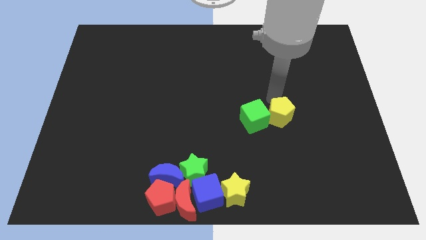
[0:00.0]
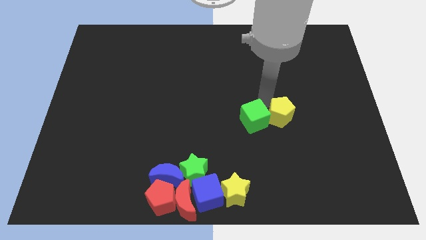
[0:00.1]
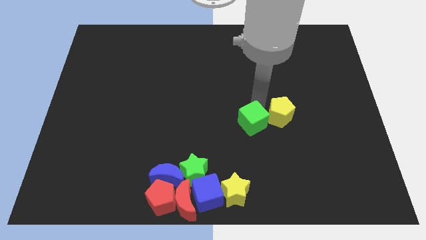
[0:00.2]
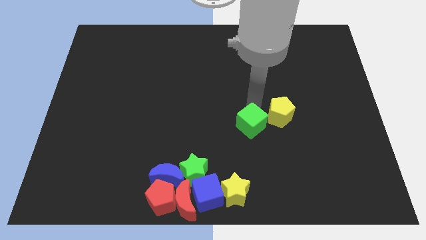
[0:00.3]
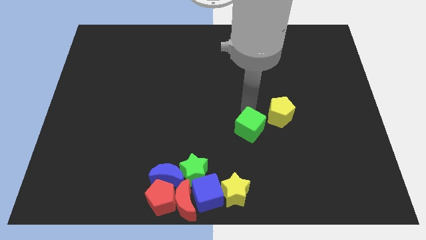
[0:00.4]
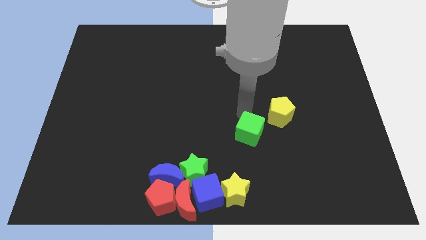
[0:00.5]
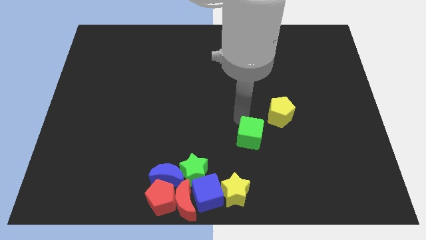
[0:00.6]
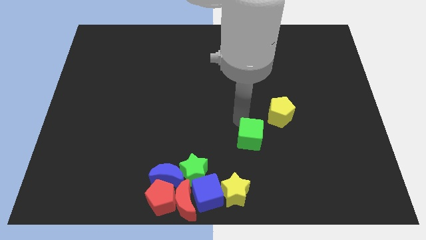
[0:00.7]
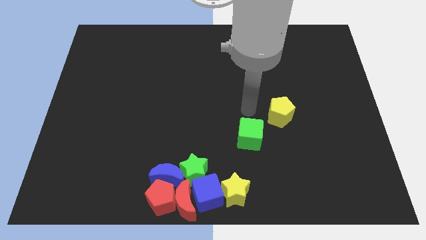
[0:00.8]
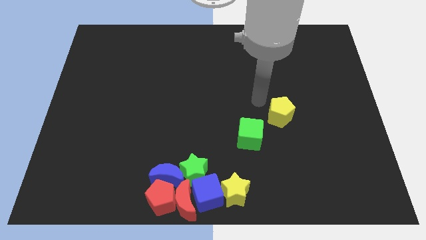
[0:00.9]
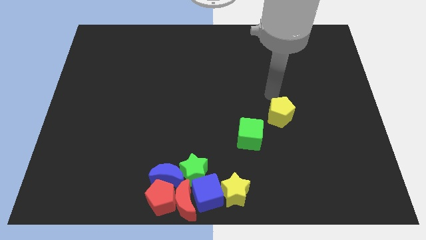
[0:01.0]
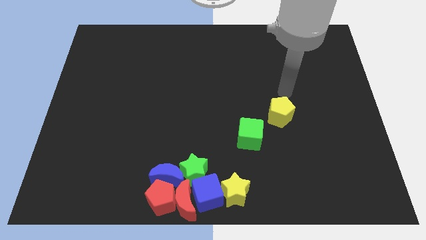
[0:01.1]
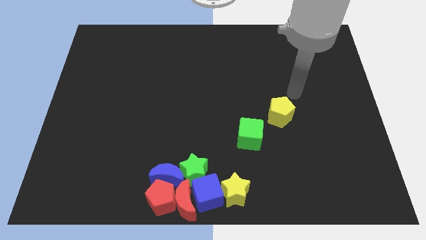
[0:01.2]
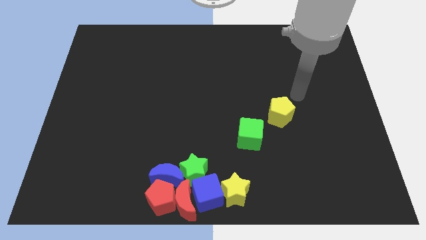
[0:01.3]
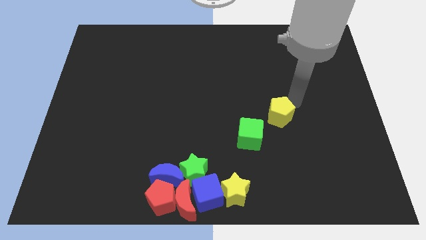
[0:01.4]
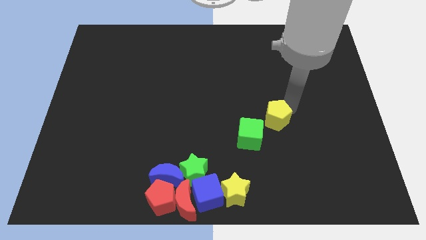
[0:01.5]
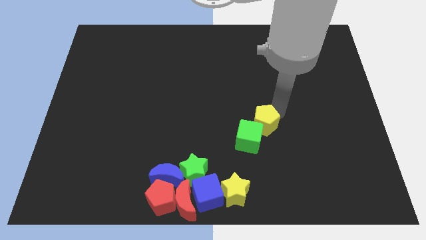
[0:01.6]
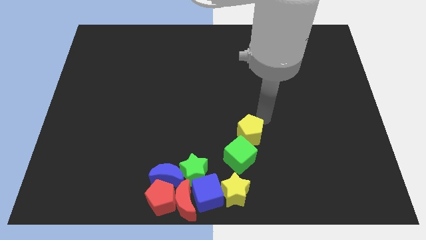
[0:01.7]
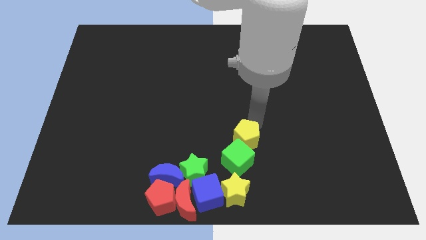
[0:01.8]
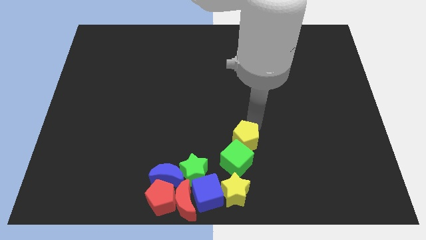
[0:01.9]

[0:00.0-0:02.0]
place the yellow pentagon along with the green cube at the top of the yellow star

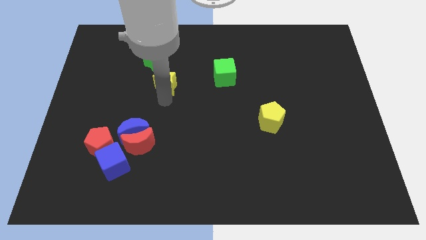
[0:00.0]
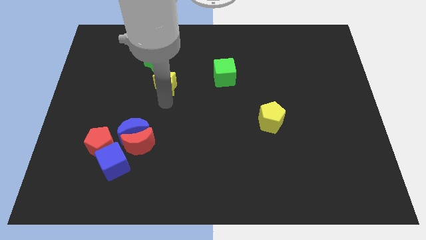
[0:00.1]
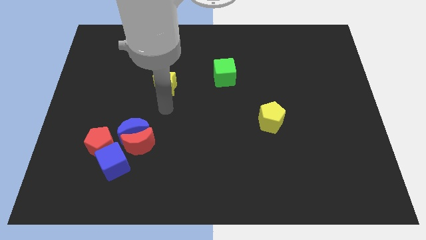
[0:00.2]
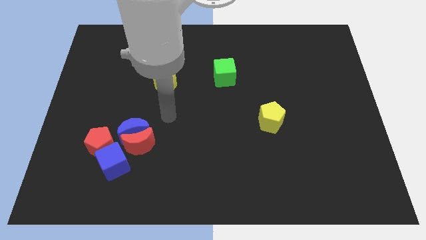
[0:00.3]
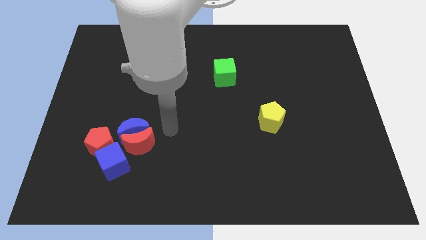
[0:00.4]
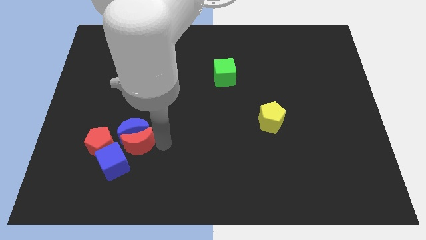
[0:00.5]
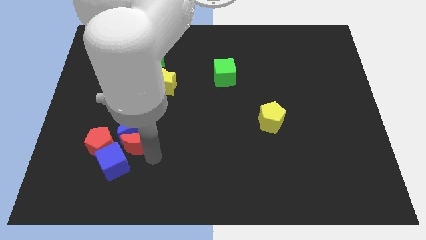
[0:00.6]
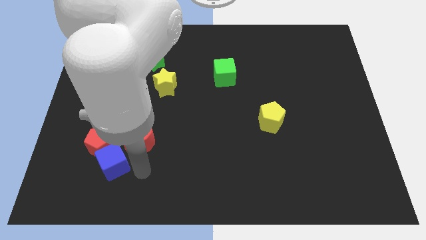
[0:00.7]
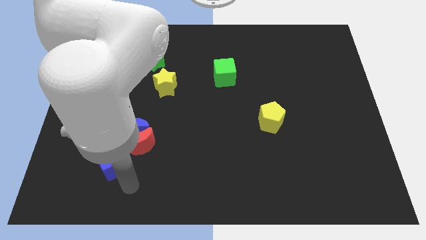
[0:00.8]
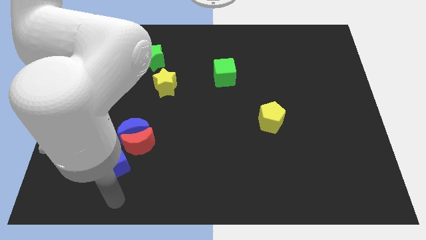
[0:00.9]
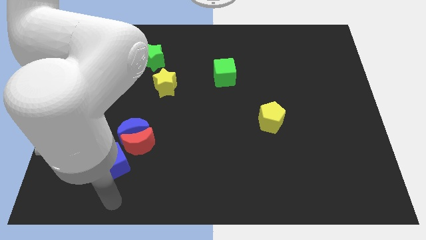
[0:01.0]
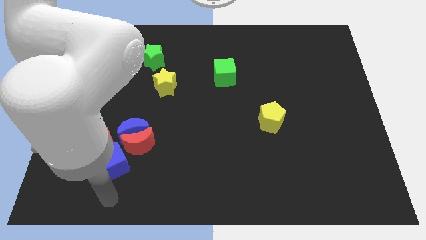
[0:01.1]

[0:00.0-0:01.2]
move away from the yellow star

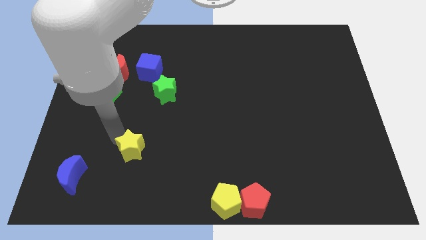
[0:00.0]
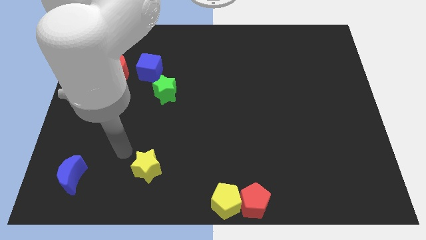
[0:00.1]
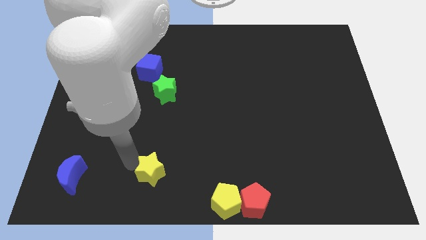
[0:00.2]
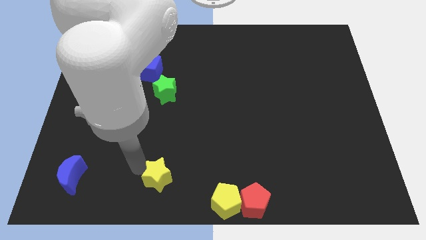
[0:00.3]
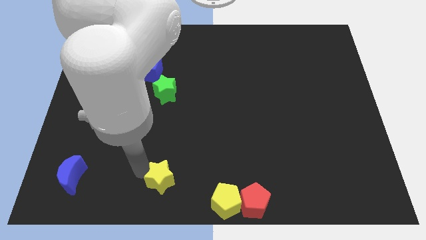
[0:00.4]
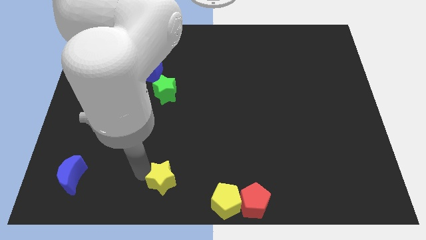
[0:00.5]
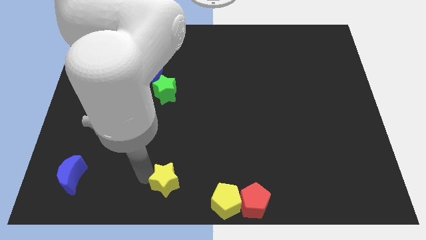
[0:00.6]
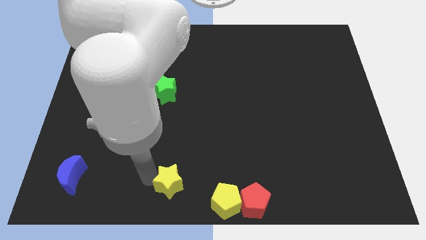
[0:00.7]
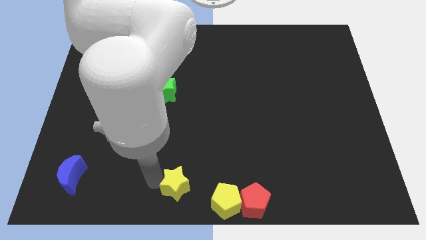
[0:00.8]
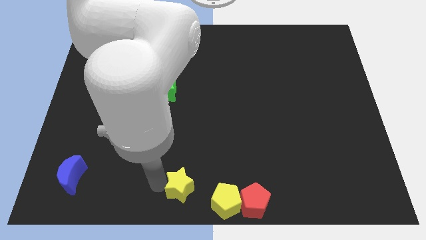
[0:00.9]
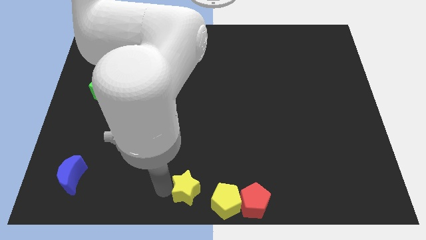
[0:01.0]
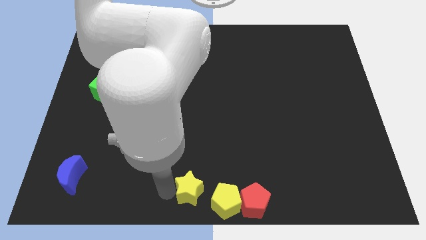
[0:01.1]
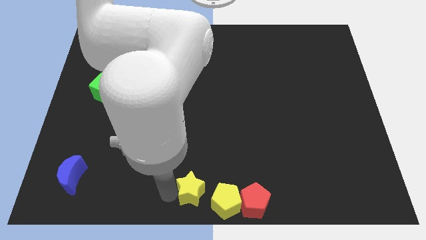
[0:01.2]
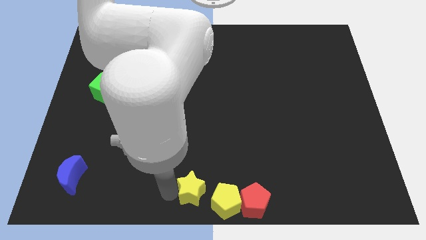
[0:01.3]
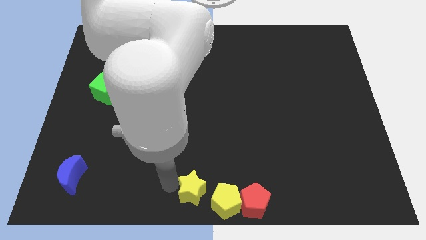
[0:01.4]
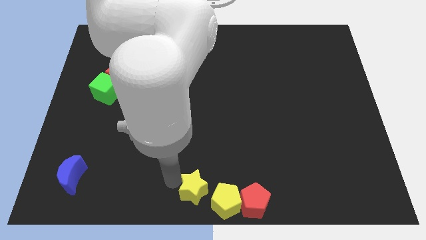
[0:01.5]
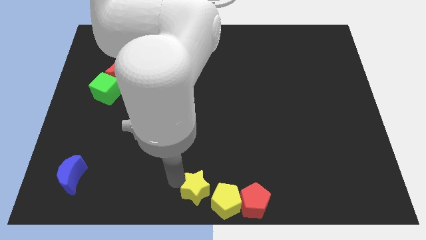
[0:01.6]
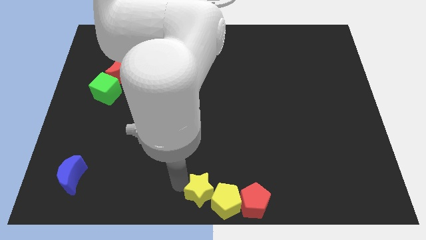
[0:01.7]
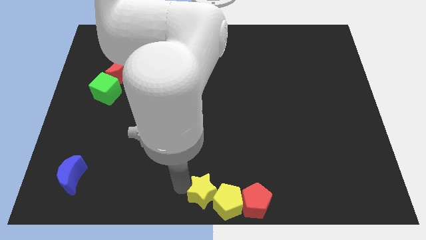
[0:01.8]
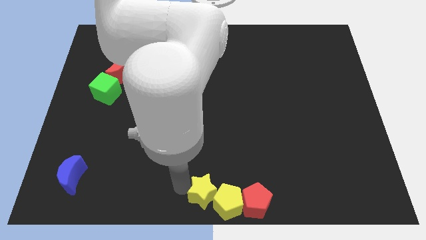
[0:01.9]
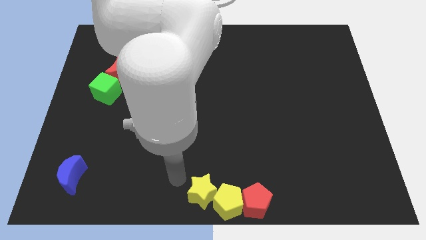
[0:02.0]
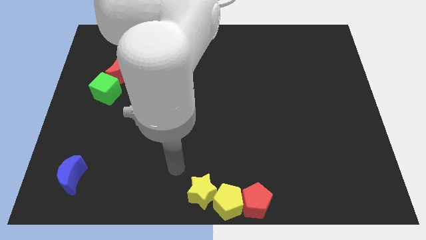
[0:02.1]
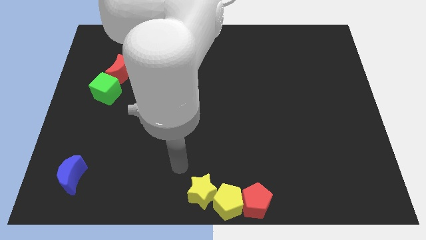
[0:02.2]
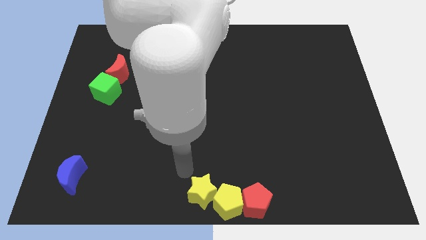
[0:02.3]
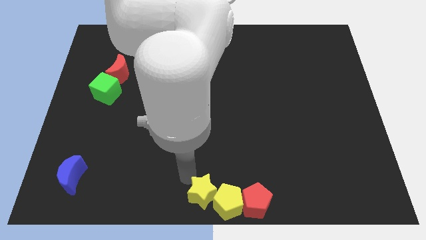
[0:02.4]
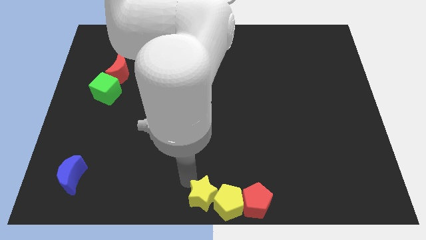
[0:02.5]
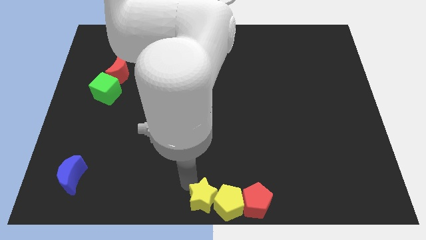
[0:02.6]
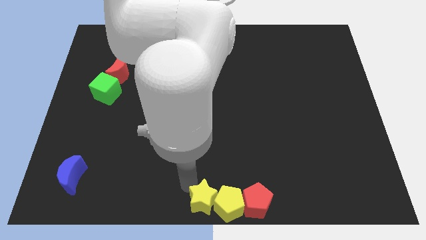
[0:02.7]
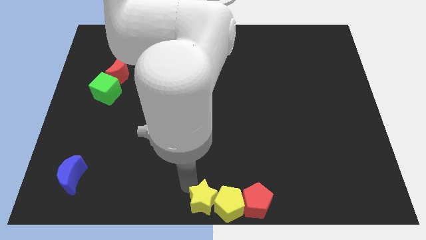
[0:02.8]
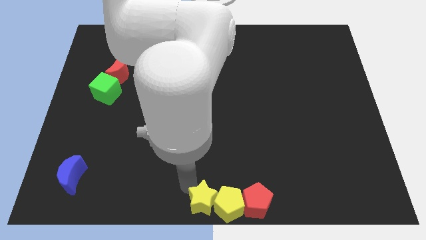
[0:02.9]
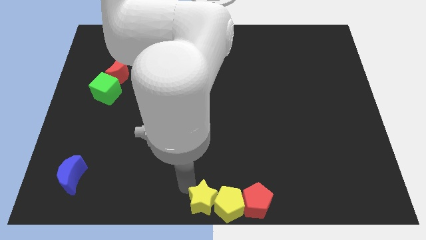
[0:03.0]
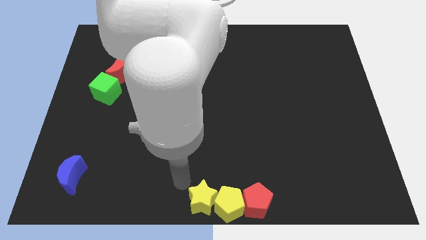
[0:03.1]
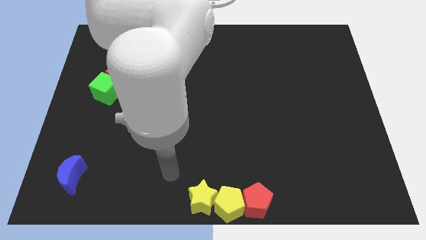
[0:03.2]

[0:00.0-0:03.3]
push the yellow star to the left of yellow pentagon

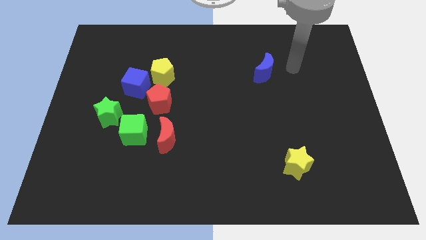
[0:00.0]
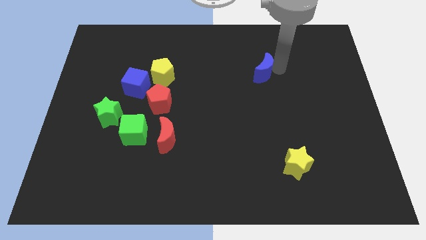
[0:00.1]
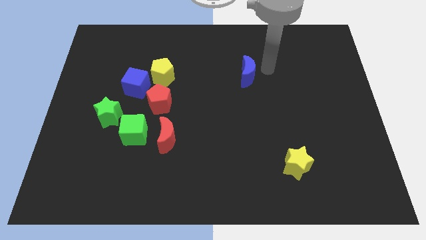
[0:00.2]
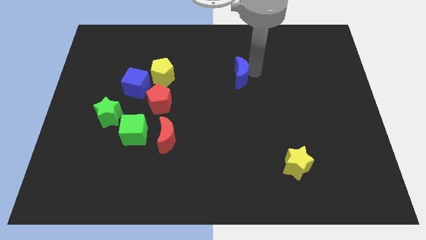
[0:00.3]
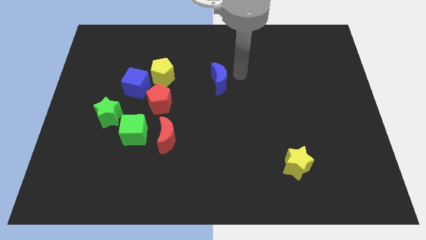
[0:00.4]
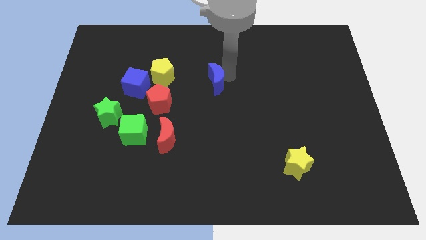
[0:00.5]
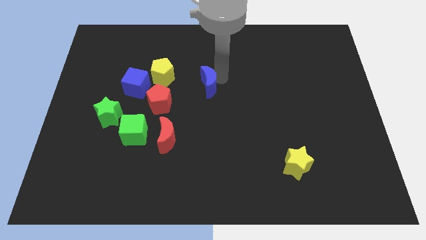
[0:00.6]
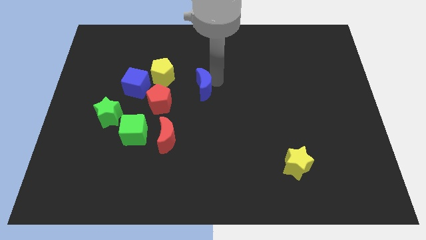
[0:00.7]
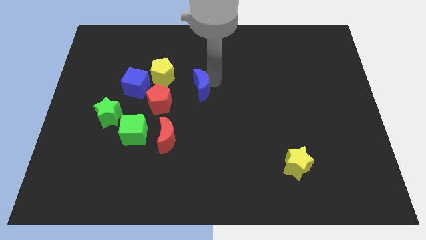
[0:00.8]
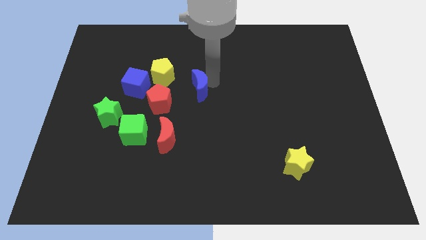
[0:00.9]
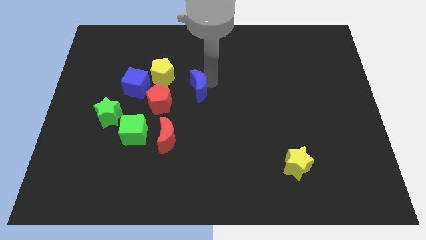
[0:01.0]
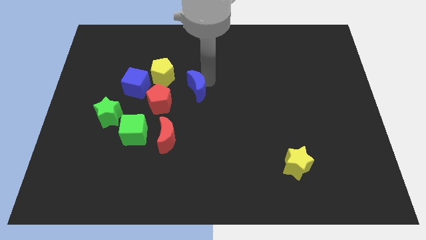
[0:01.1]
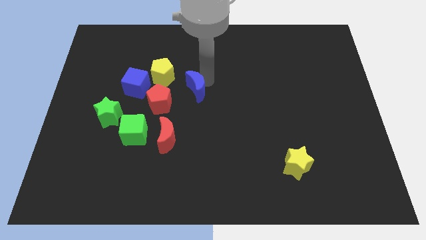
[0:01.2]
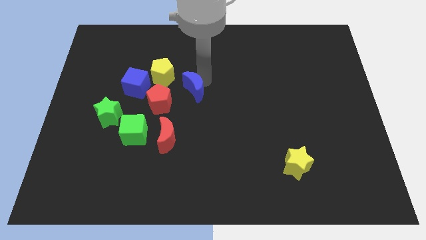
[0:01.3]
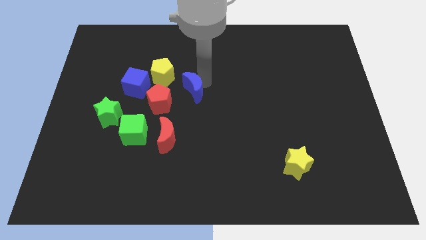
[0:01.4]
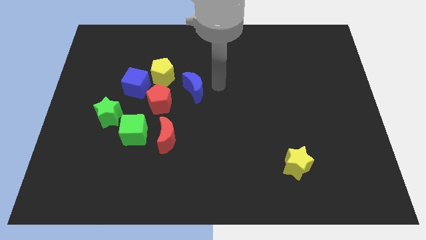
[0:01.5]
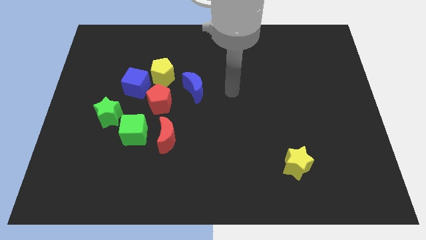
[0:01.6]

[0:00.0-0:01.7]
move blue crescent towards the yellow pentagon

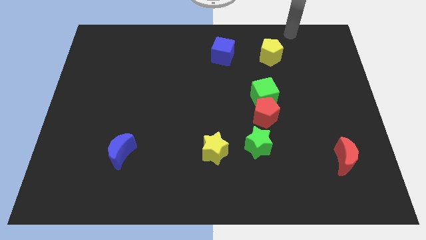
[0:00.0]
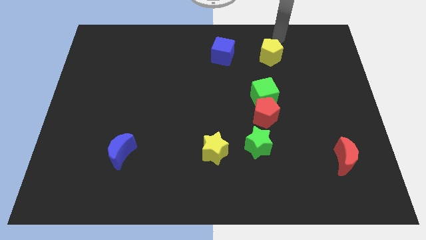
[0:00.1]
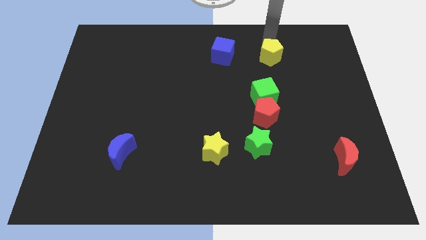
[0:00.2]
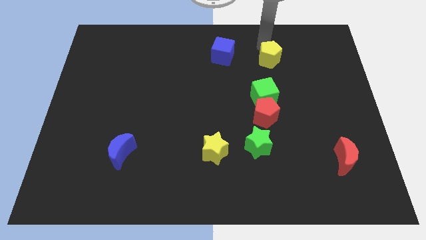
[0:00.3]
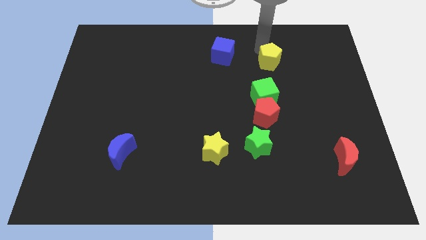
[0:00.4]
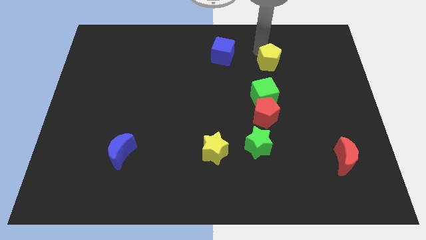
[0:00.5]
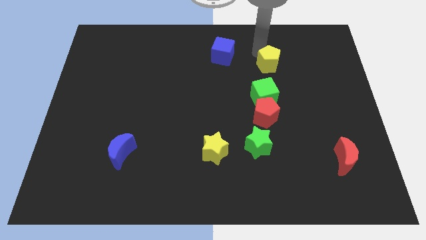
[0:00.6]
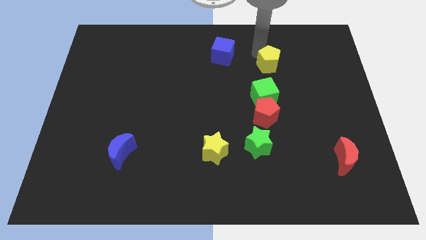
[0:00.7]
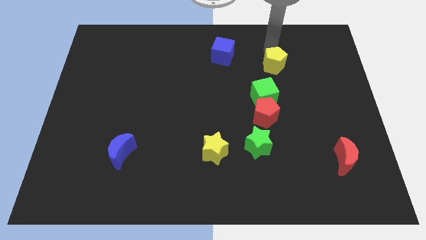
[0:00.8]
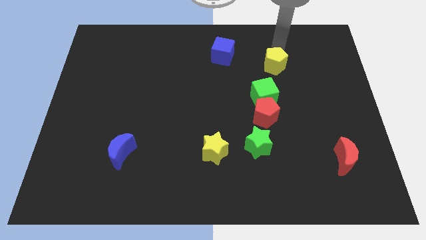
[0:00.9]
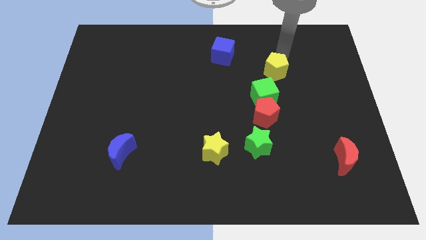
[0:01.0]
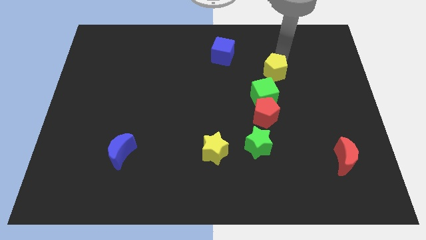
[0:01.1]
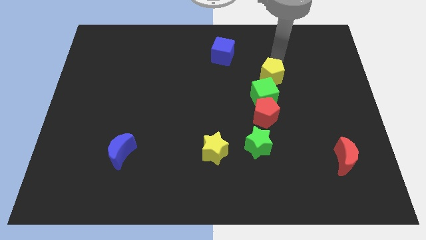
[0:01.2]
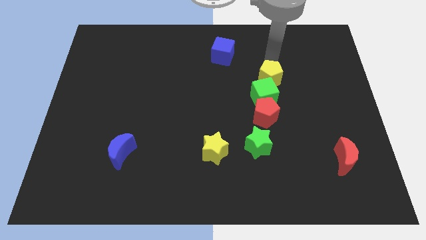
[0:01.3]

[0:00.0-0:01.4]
move the yellow pentagon closer to the green cube
